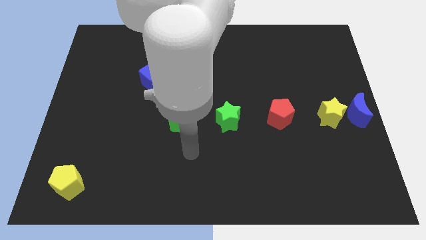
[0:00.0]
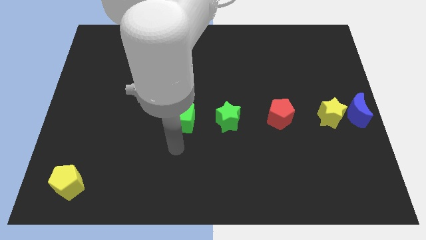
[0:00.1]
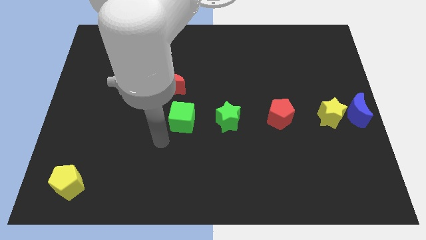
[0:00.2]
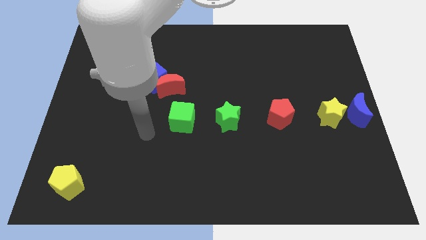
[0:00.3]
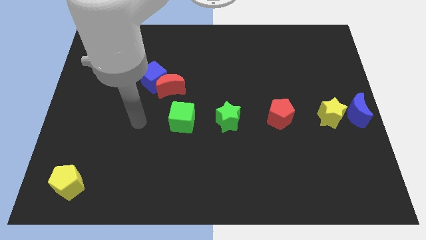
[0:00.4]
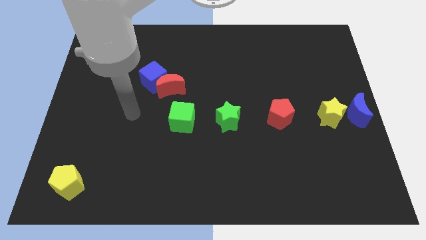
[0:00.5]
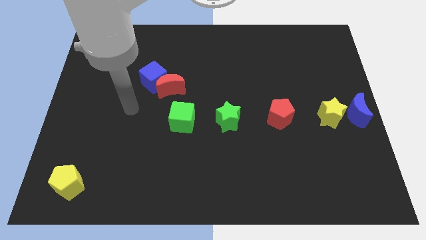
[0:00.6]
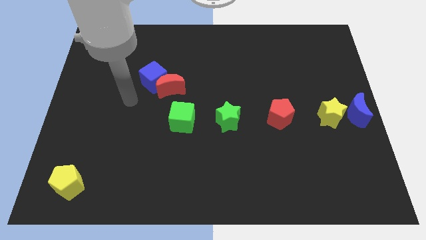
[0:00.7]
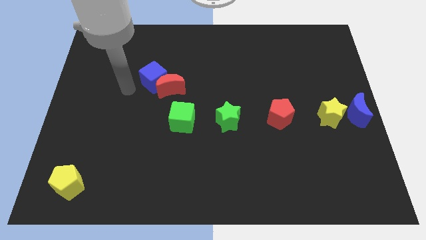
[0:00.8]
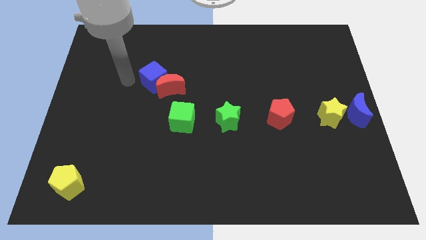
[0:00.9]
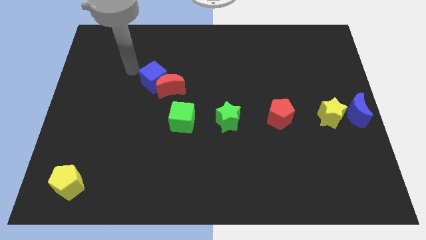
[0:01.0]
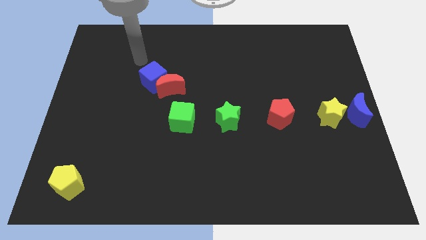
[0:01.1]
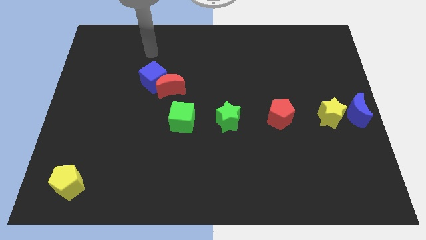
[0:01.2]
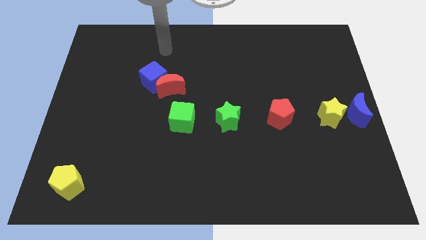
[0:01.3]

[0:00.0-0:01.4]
go and point your hand above the group of blocks

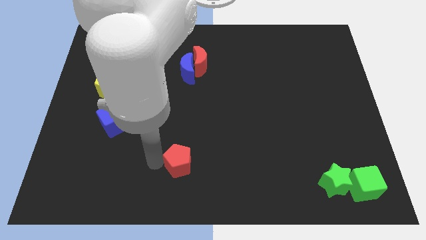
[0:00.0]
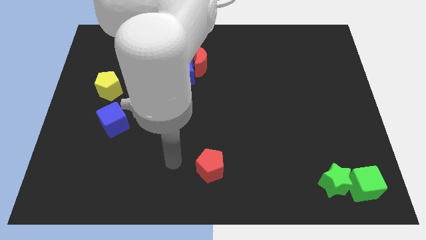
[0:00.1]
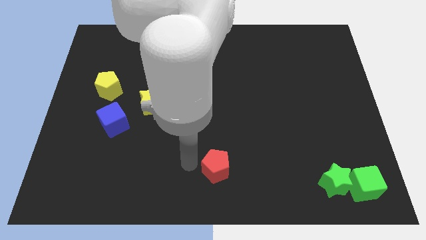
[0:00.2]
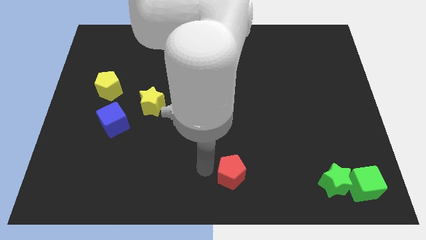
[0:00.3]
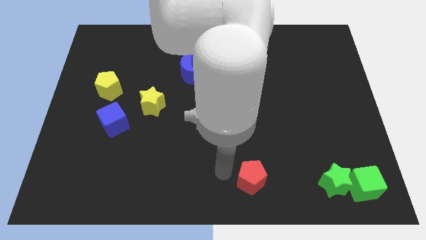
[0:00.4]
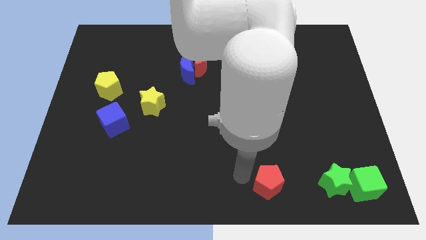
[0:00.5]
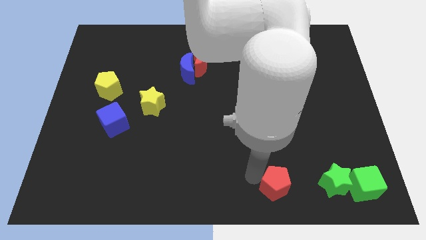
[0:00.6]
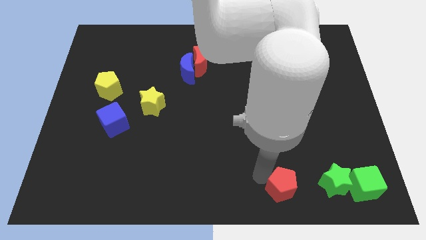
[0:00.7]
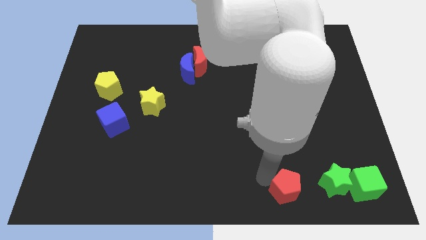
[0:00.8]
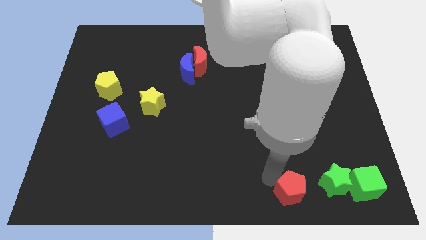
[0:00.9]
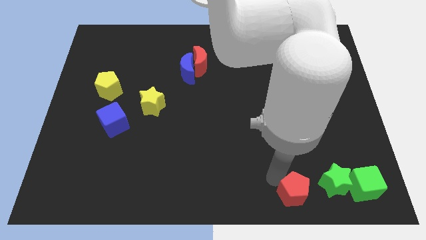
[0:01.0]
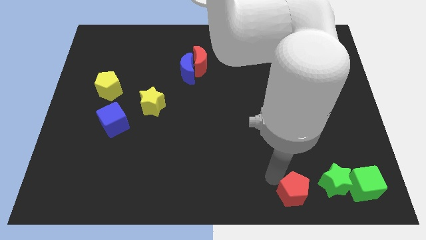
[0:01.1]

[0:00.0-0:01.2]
move the red pentagon towards the bottom right of the board

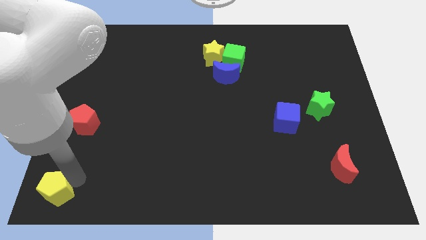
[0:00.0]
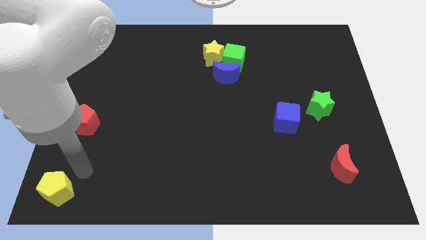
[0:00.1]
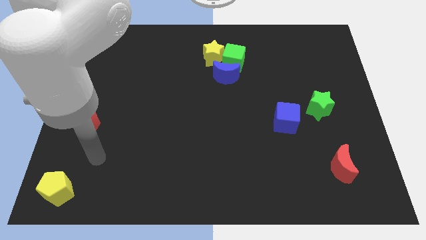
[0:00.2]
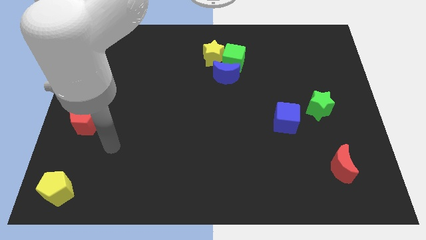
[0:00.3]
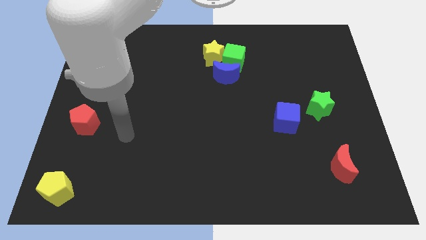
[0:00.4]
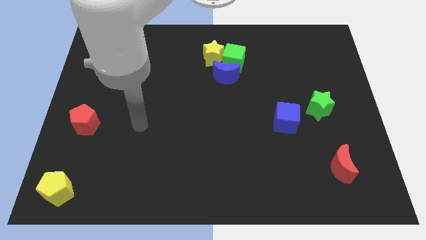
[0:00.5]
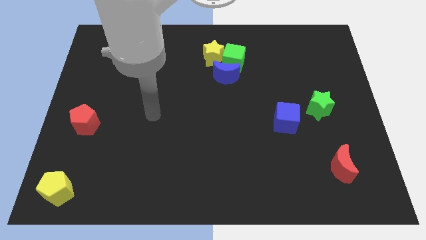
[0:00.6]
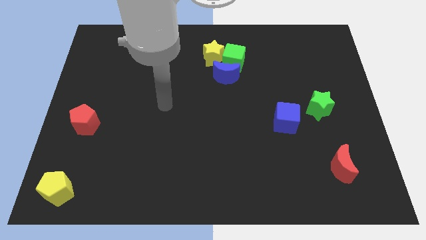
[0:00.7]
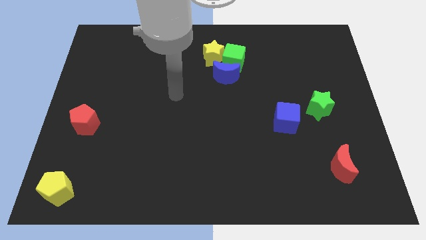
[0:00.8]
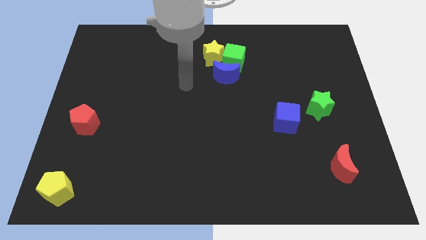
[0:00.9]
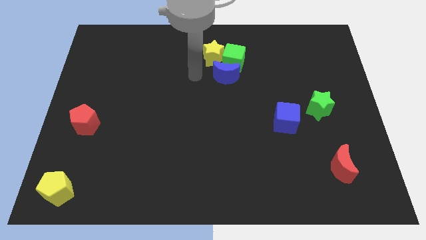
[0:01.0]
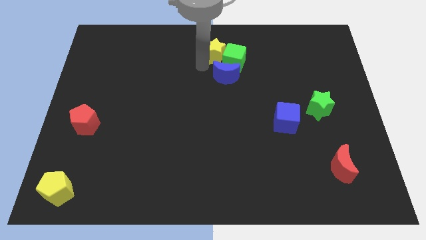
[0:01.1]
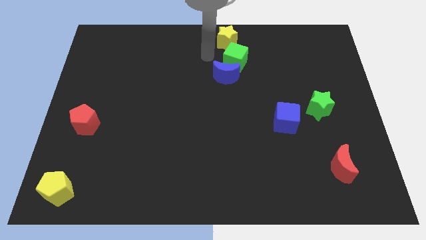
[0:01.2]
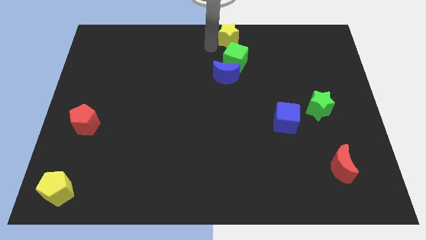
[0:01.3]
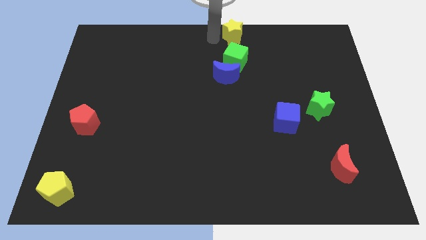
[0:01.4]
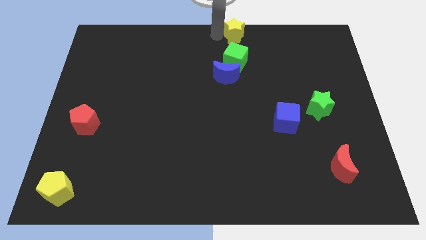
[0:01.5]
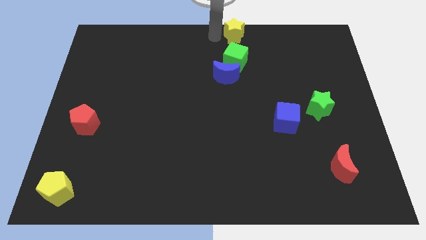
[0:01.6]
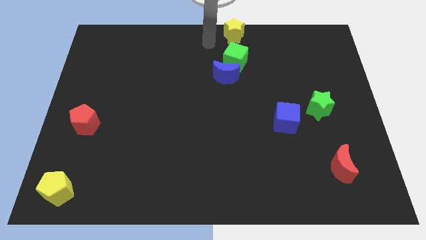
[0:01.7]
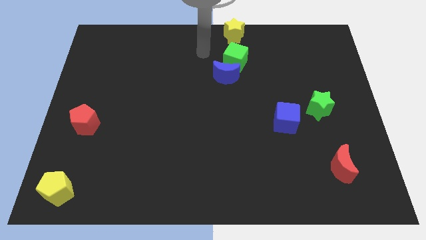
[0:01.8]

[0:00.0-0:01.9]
move the yellow star to the top center of the board

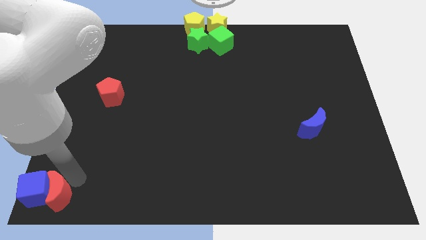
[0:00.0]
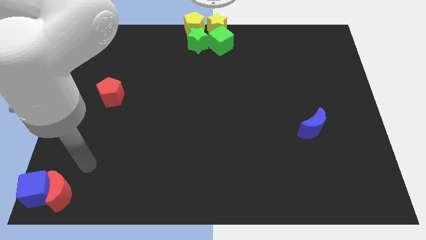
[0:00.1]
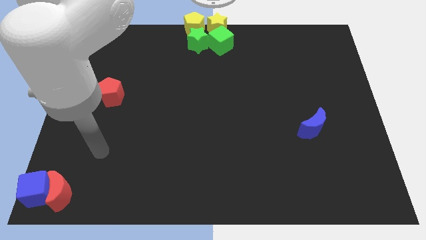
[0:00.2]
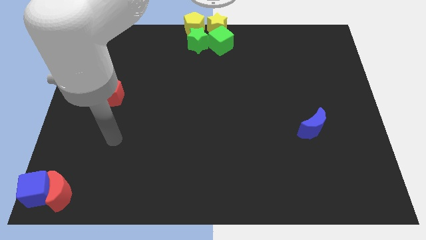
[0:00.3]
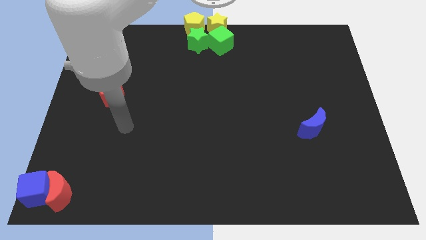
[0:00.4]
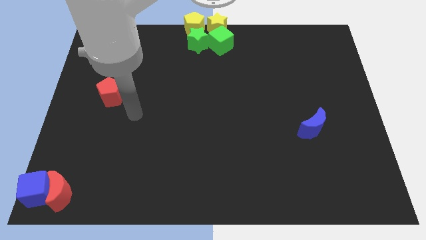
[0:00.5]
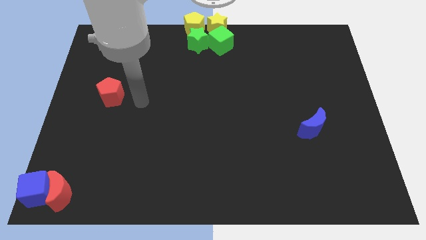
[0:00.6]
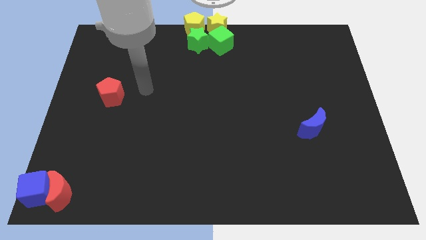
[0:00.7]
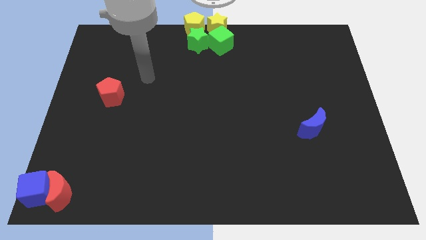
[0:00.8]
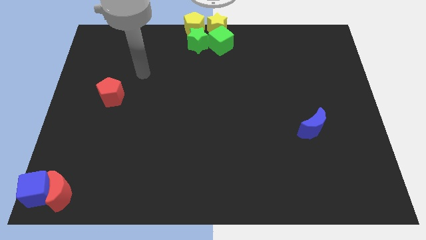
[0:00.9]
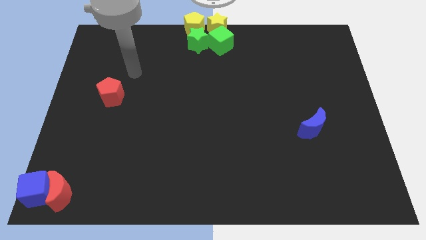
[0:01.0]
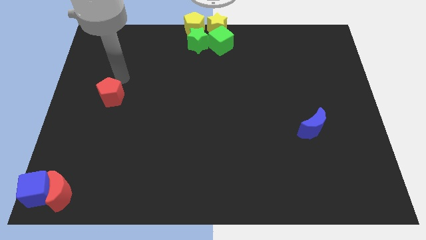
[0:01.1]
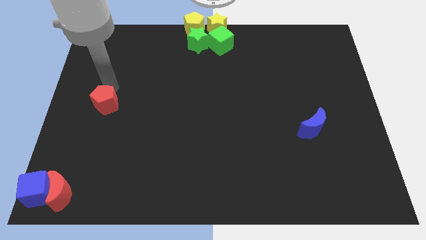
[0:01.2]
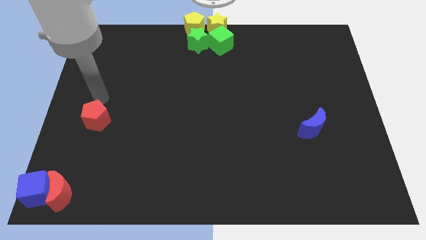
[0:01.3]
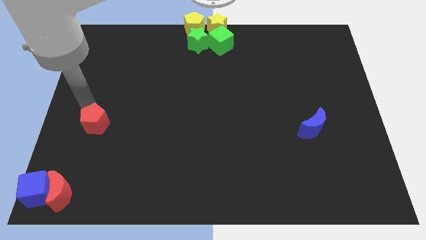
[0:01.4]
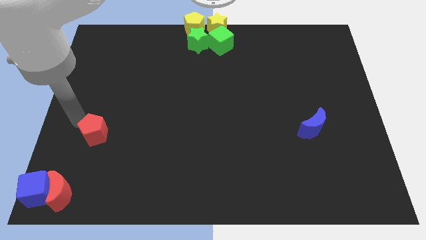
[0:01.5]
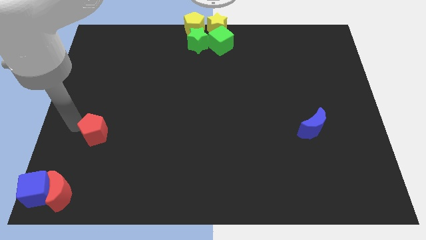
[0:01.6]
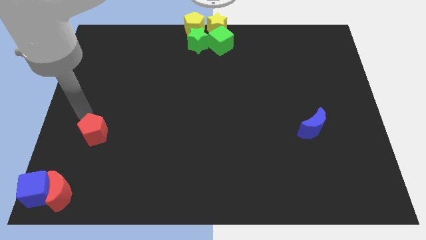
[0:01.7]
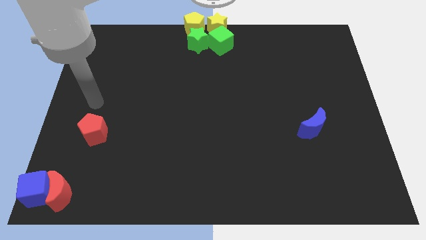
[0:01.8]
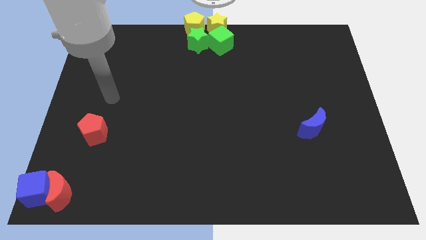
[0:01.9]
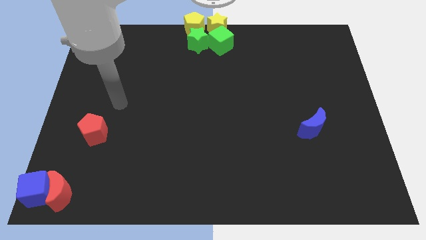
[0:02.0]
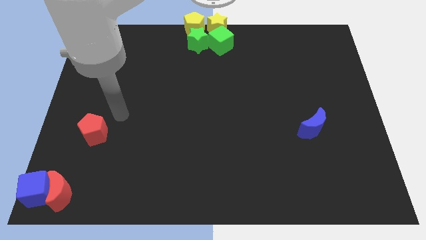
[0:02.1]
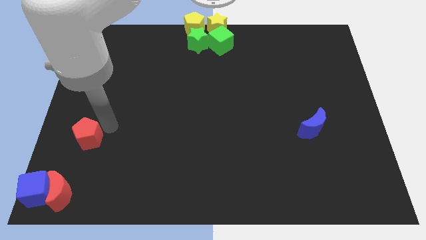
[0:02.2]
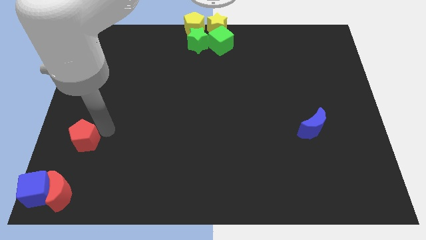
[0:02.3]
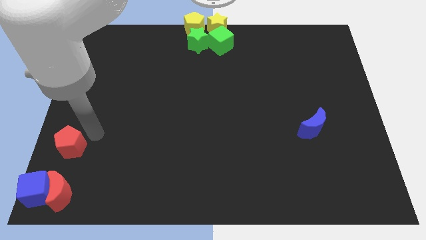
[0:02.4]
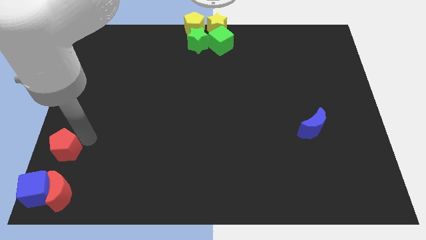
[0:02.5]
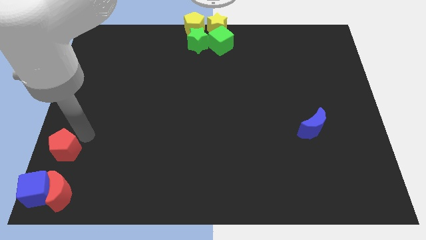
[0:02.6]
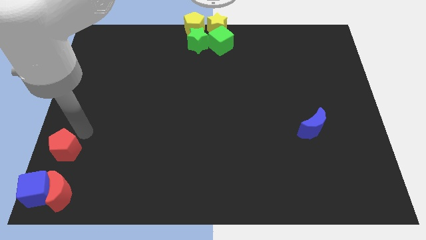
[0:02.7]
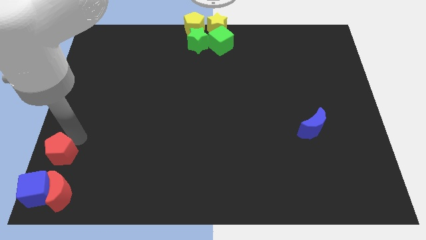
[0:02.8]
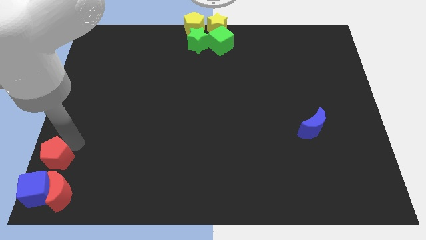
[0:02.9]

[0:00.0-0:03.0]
place the red pentagon to the top of red crescent

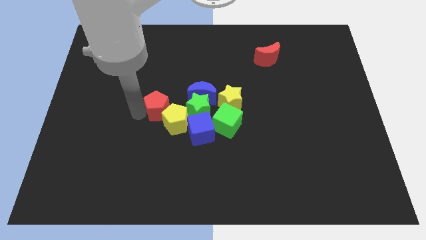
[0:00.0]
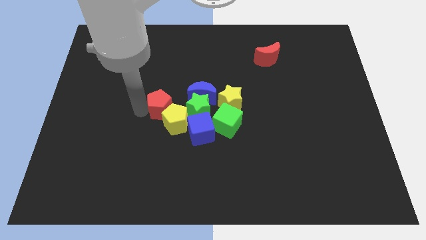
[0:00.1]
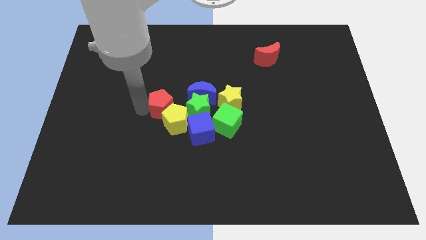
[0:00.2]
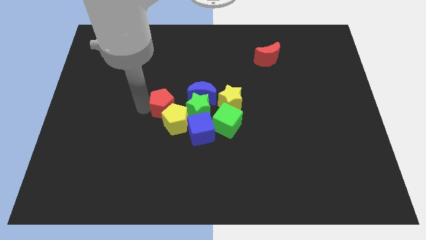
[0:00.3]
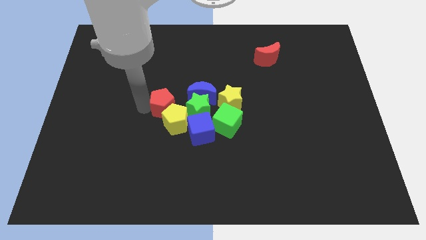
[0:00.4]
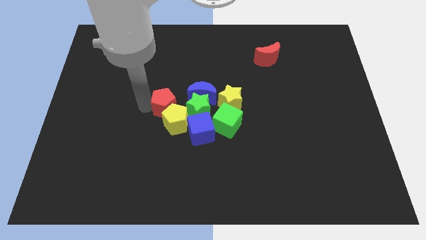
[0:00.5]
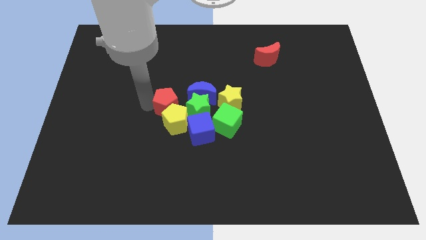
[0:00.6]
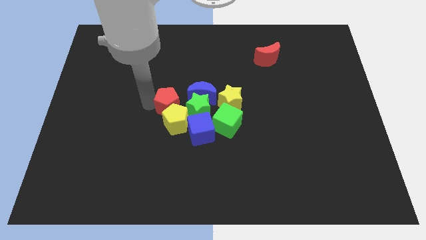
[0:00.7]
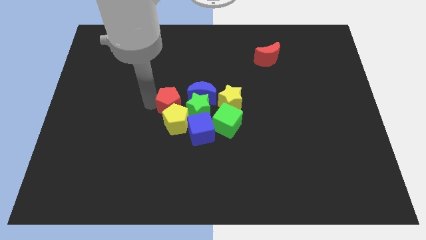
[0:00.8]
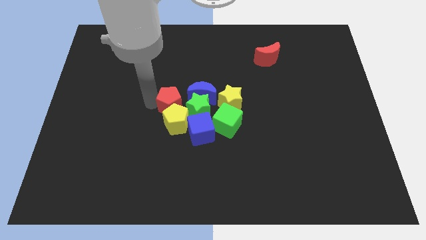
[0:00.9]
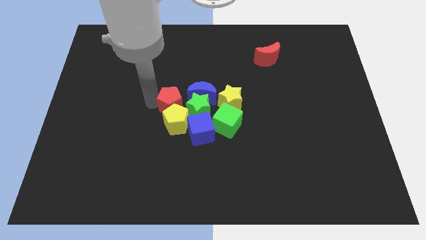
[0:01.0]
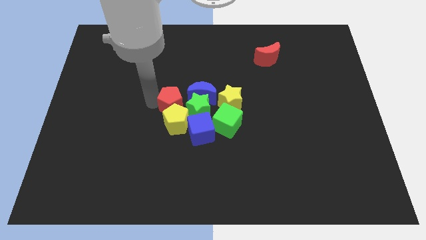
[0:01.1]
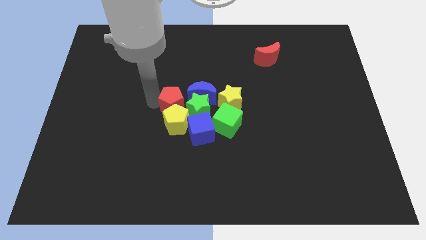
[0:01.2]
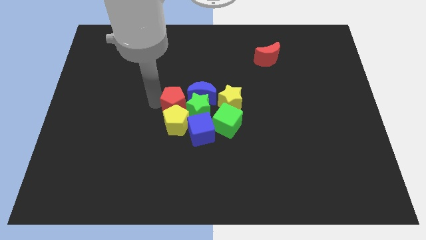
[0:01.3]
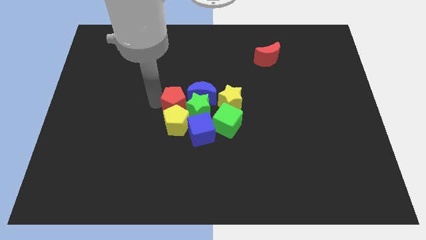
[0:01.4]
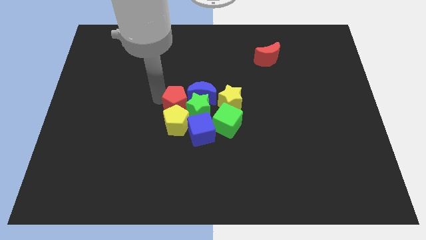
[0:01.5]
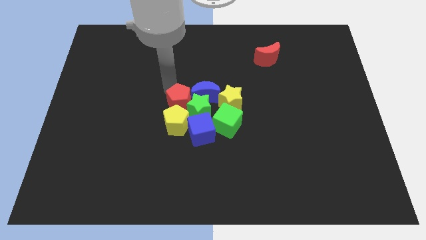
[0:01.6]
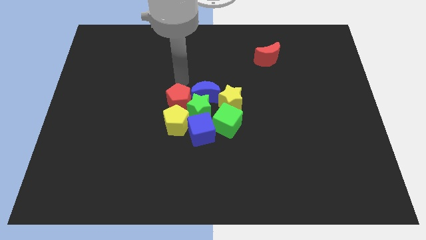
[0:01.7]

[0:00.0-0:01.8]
push the red pentagon to the left of the green star
